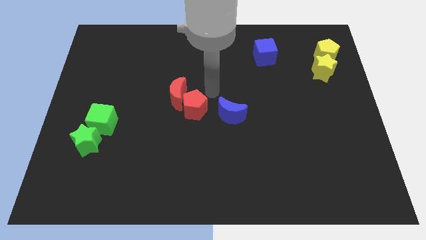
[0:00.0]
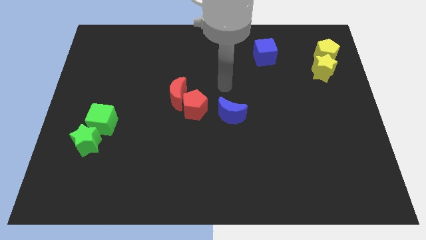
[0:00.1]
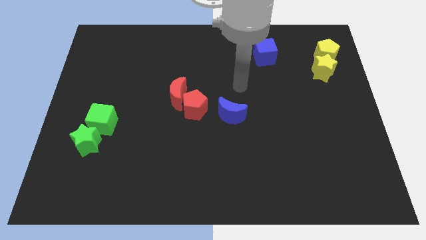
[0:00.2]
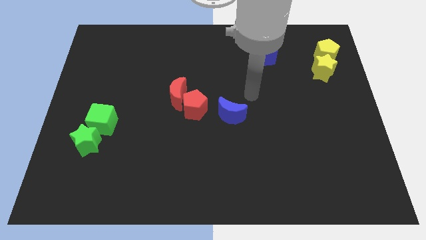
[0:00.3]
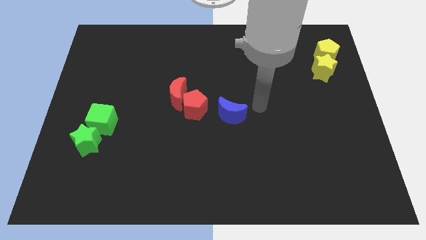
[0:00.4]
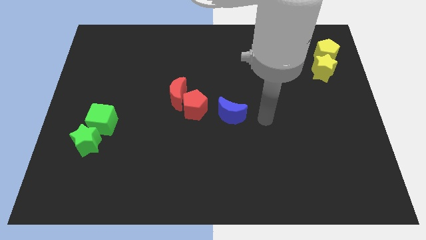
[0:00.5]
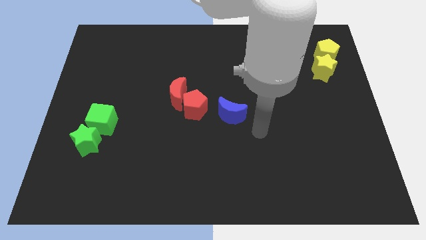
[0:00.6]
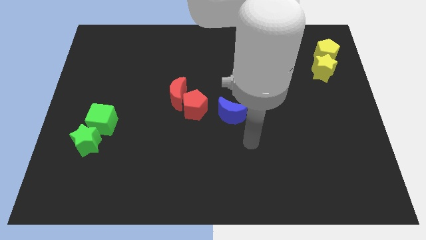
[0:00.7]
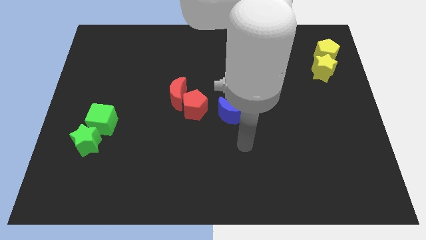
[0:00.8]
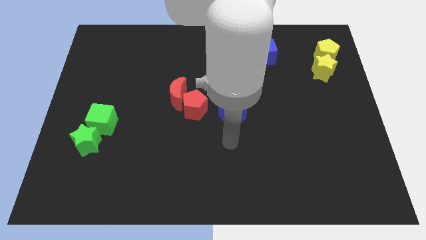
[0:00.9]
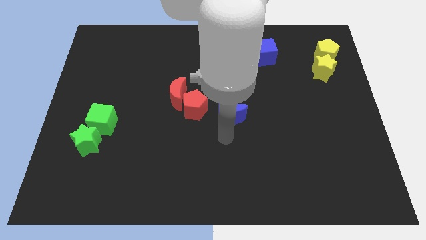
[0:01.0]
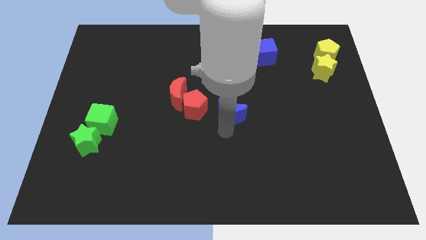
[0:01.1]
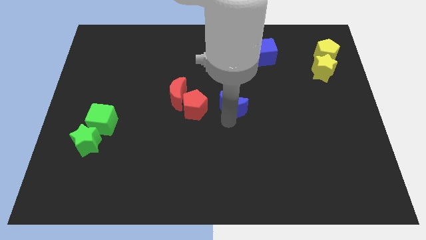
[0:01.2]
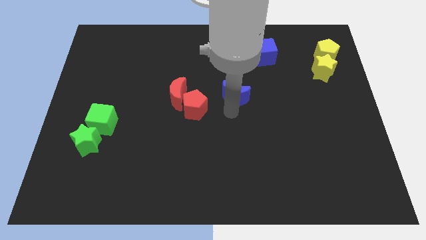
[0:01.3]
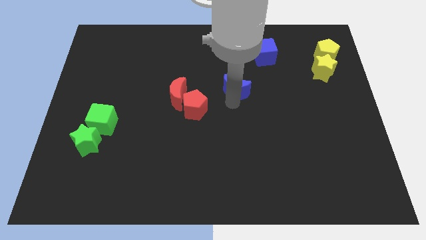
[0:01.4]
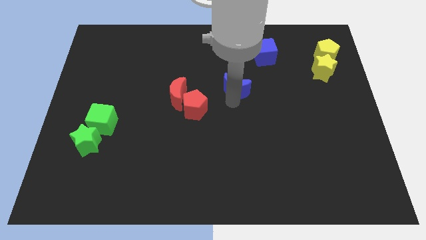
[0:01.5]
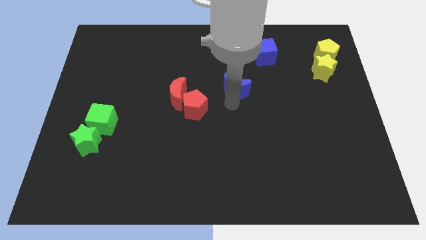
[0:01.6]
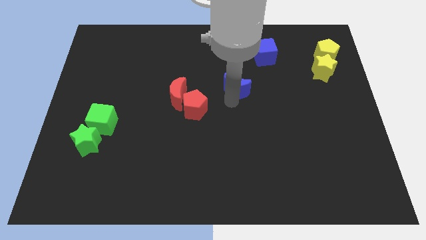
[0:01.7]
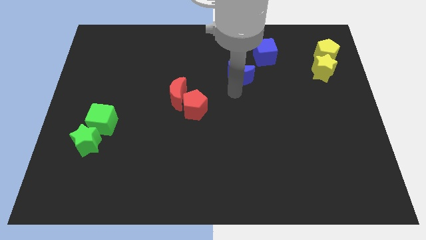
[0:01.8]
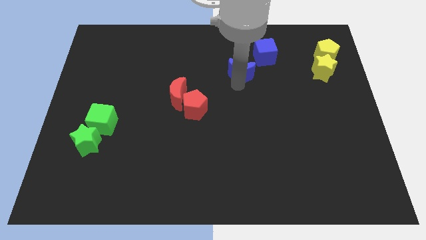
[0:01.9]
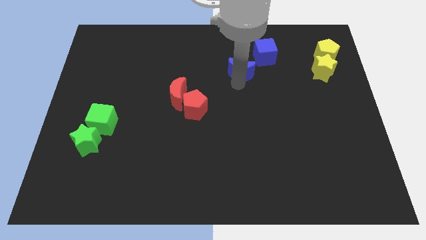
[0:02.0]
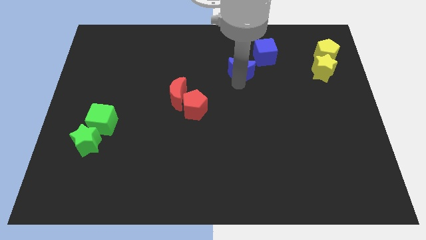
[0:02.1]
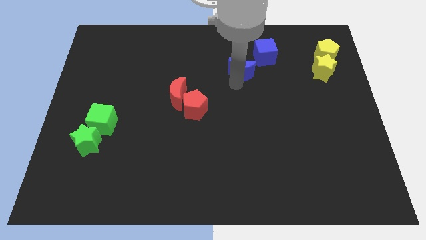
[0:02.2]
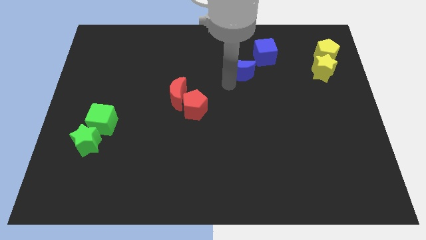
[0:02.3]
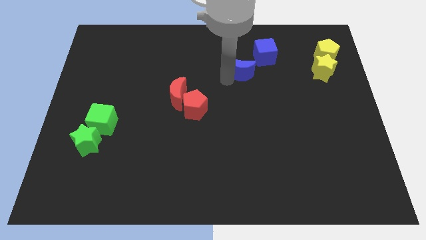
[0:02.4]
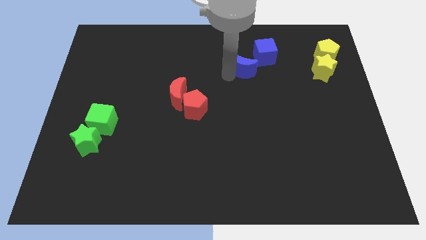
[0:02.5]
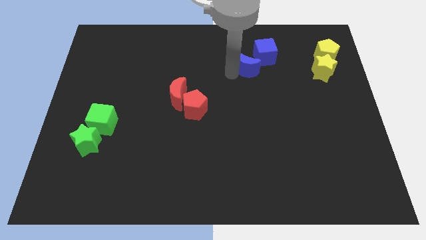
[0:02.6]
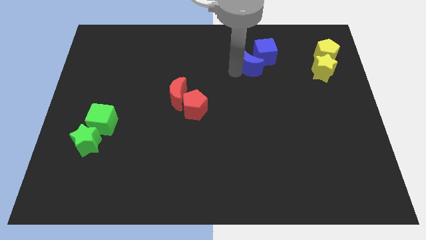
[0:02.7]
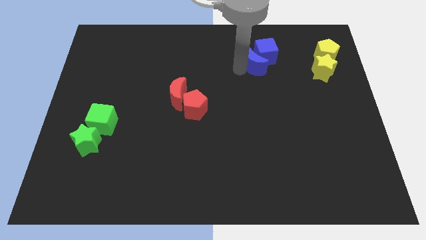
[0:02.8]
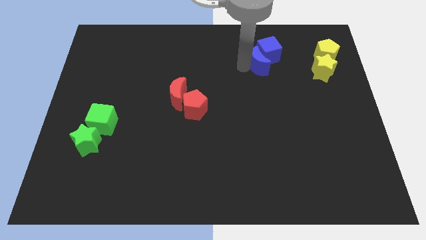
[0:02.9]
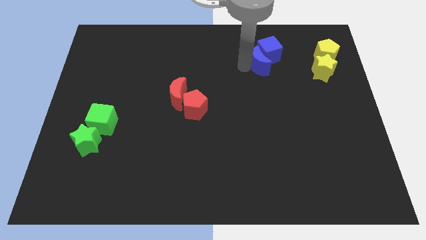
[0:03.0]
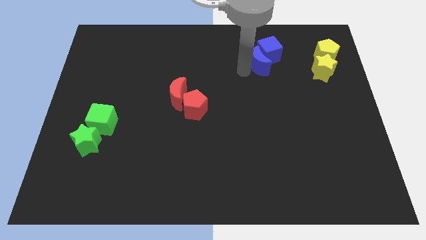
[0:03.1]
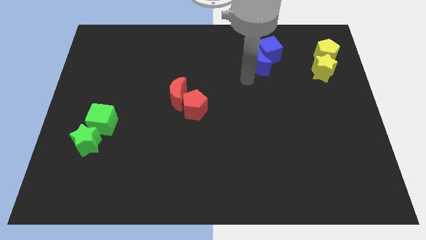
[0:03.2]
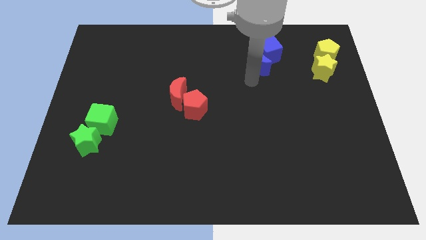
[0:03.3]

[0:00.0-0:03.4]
move the blue crescent to the left of the blue cube

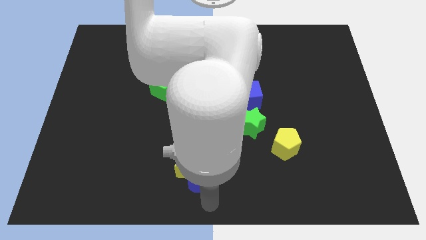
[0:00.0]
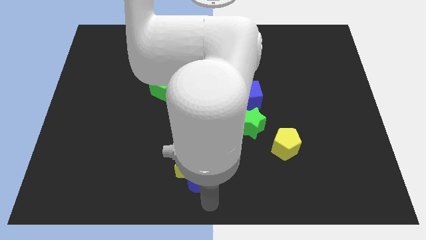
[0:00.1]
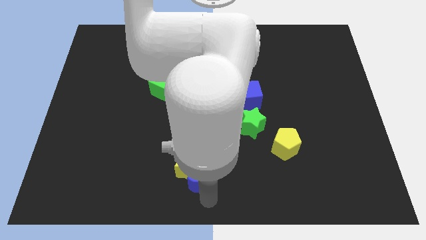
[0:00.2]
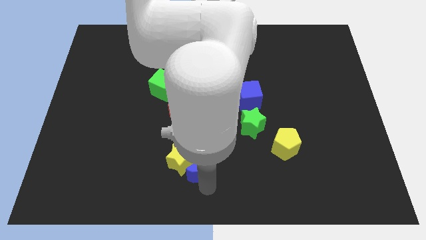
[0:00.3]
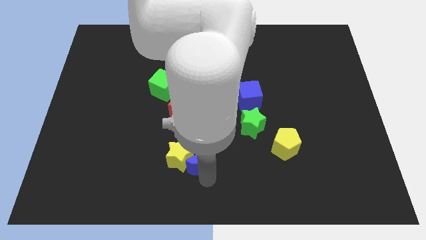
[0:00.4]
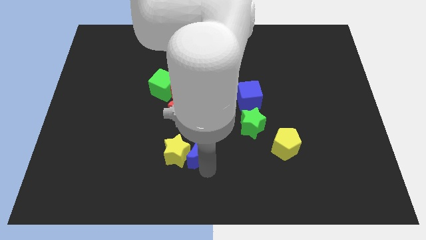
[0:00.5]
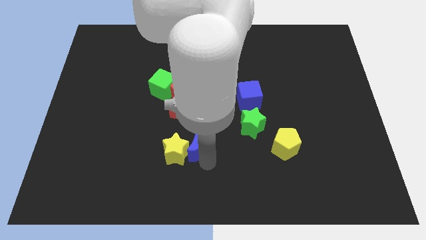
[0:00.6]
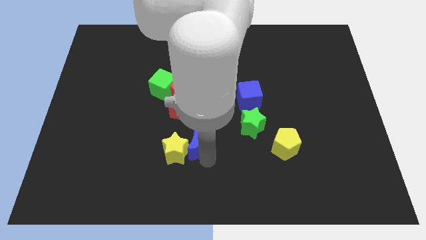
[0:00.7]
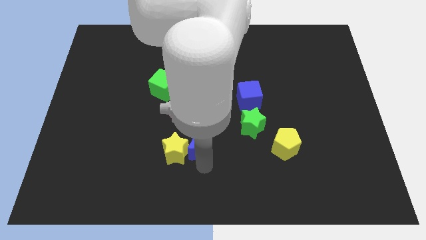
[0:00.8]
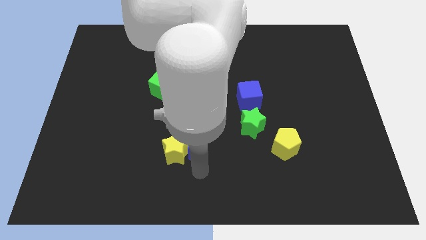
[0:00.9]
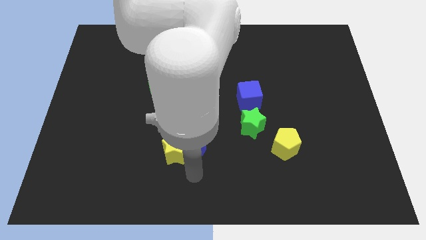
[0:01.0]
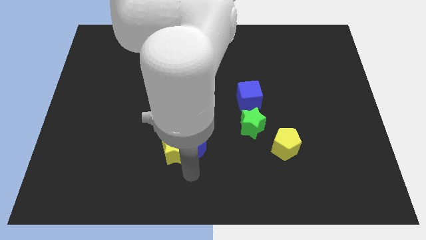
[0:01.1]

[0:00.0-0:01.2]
push the yellow star and blue moon towards the red crescent

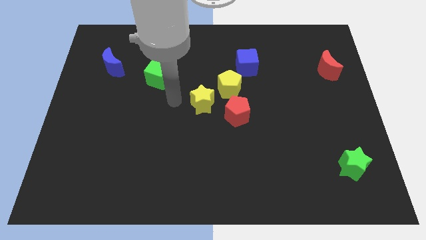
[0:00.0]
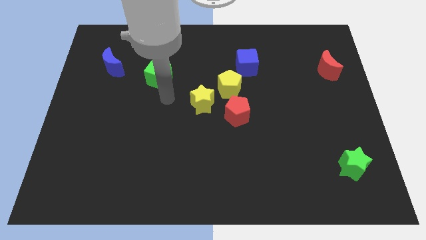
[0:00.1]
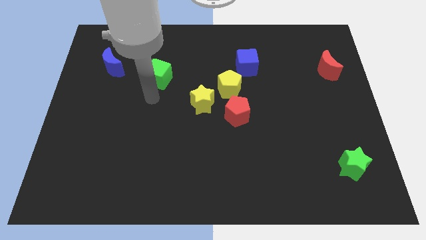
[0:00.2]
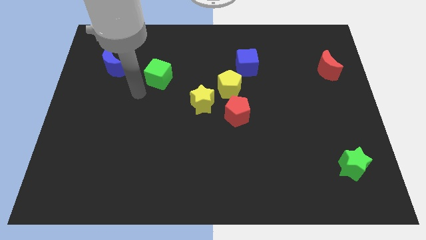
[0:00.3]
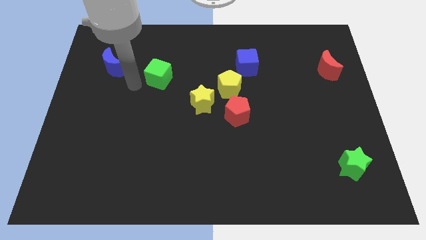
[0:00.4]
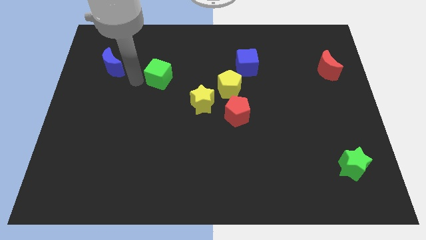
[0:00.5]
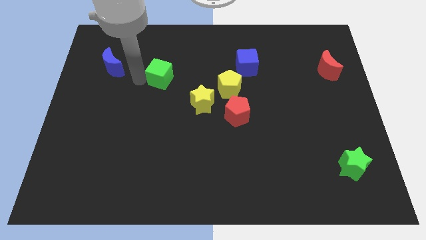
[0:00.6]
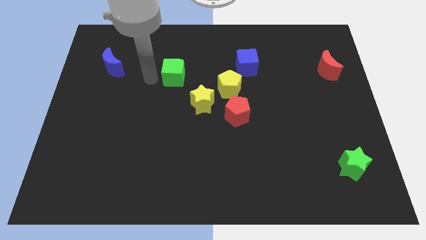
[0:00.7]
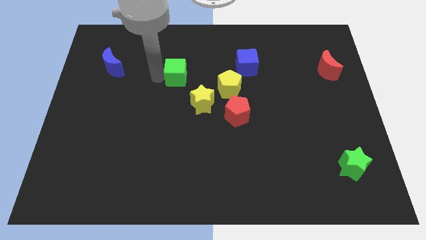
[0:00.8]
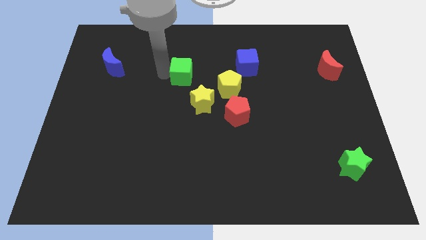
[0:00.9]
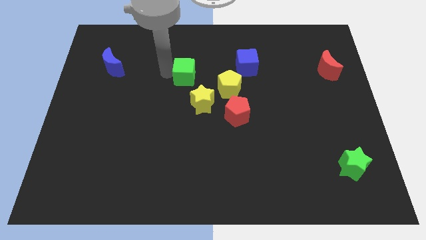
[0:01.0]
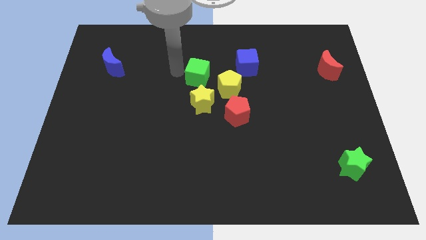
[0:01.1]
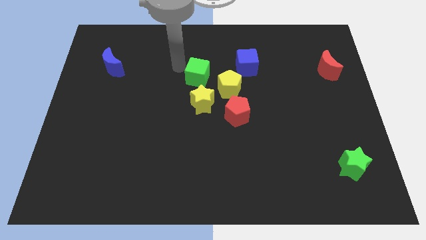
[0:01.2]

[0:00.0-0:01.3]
push the green cube to the top of the yellow star

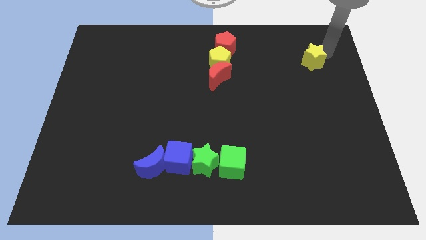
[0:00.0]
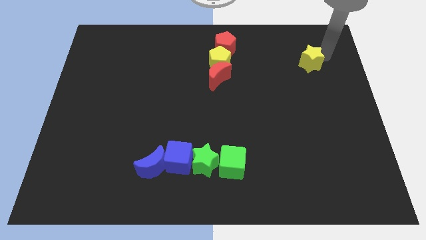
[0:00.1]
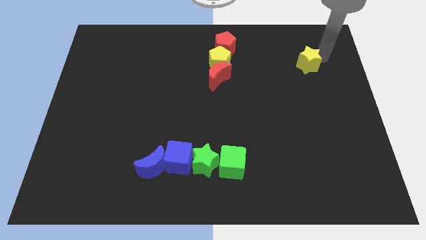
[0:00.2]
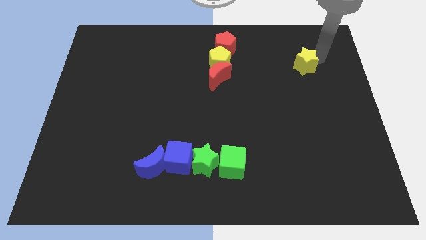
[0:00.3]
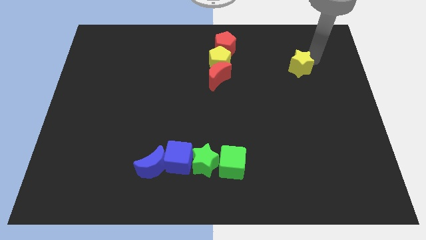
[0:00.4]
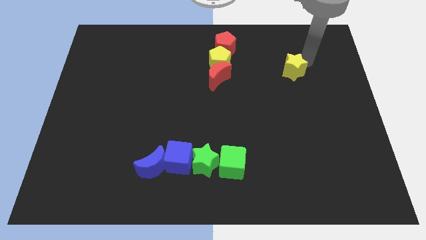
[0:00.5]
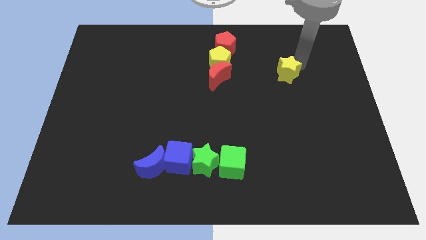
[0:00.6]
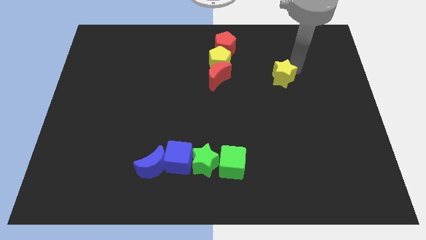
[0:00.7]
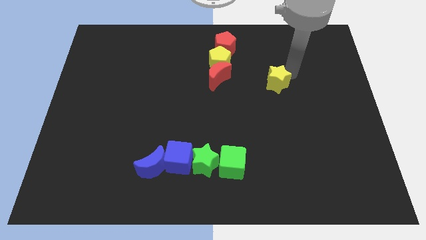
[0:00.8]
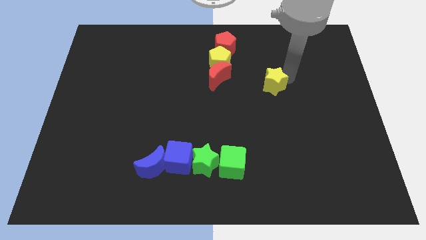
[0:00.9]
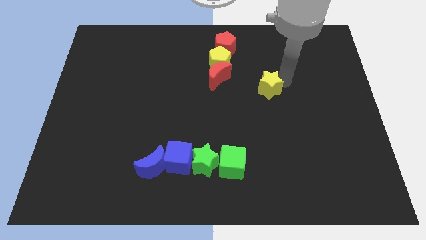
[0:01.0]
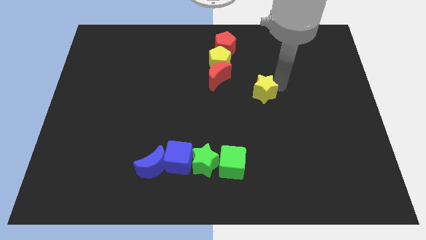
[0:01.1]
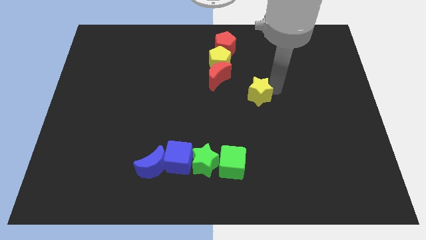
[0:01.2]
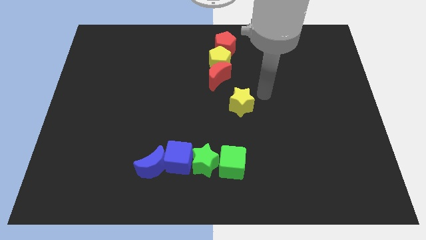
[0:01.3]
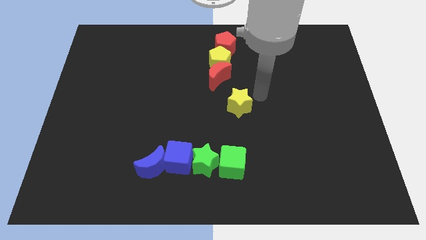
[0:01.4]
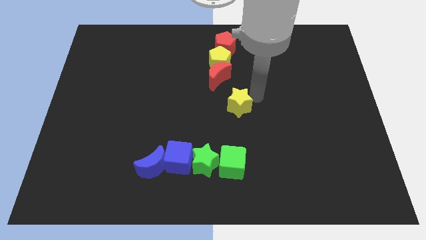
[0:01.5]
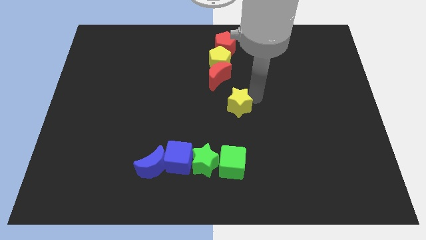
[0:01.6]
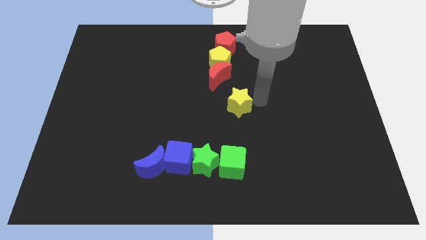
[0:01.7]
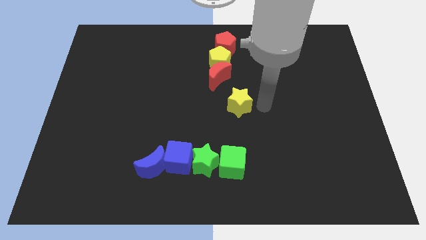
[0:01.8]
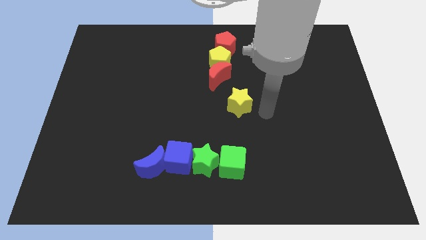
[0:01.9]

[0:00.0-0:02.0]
place the yellow star in center of the board

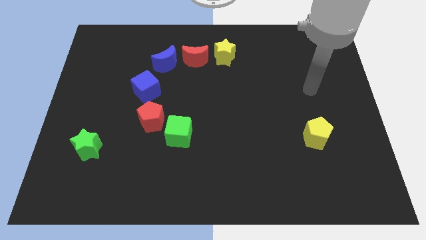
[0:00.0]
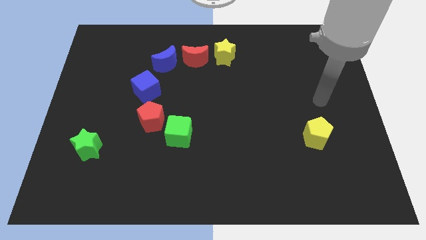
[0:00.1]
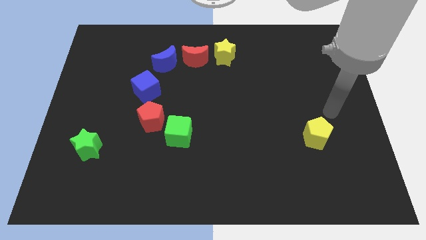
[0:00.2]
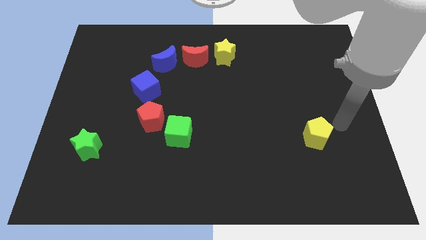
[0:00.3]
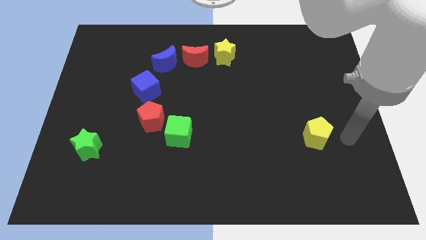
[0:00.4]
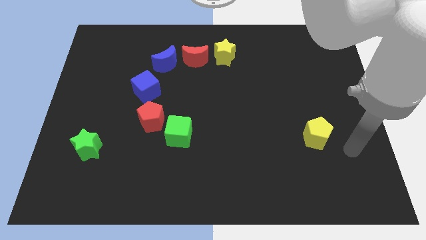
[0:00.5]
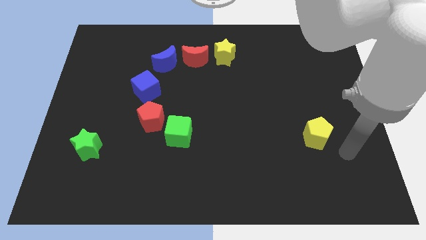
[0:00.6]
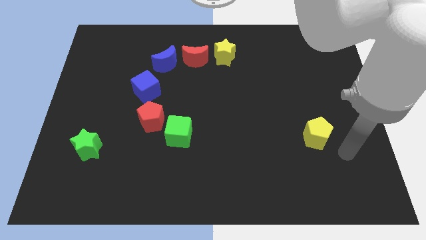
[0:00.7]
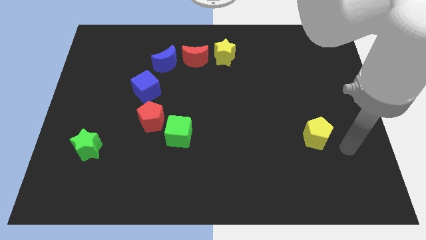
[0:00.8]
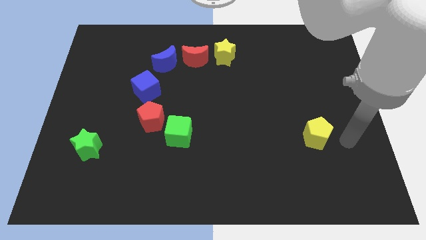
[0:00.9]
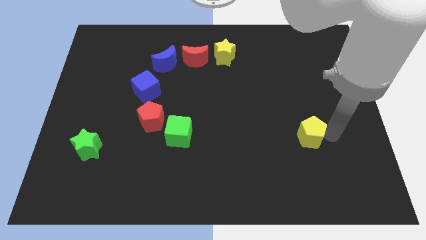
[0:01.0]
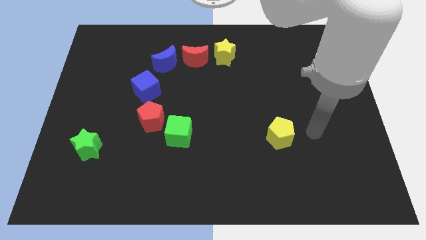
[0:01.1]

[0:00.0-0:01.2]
move the yellow pentagon slightly to the left
